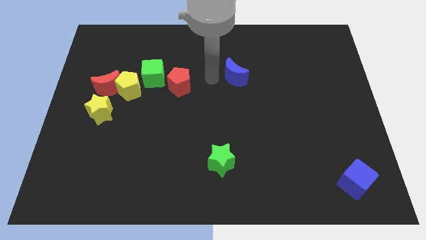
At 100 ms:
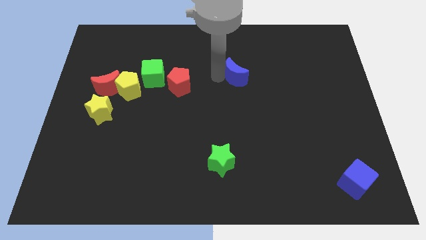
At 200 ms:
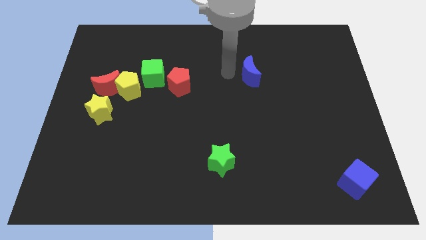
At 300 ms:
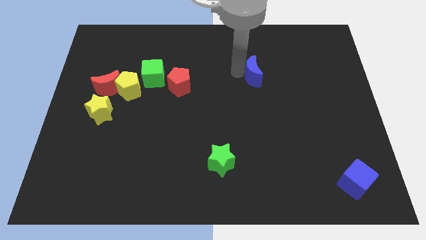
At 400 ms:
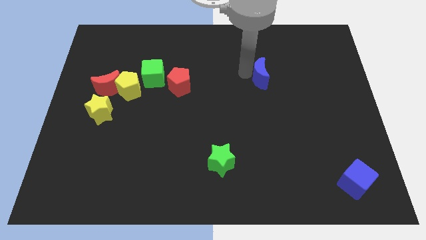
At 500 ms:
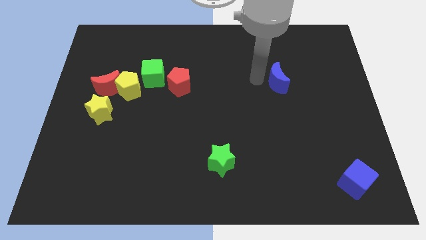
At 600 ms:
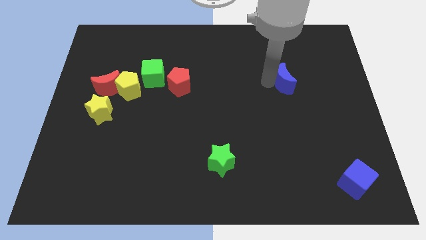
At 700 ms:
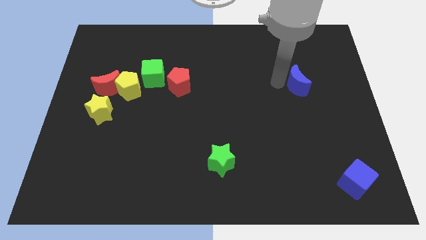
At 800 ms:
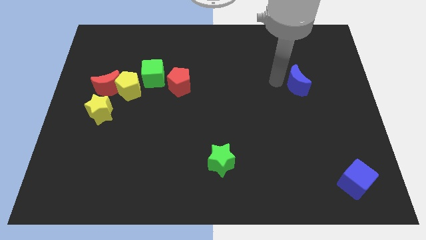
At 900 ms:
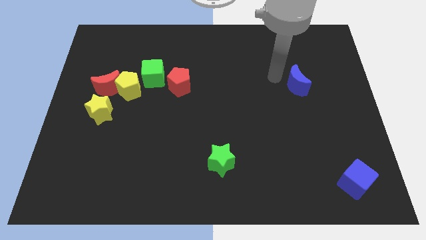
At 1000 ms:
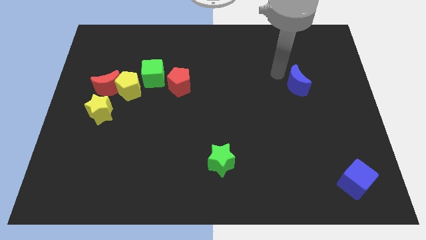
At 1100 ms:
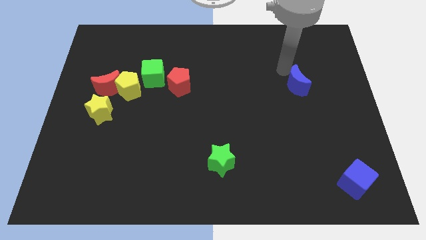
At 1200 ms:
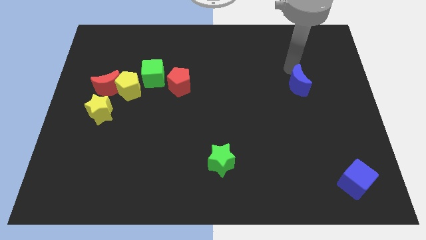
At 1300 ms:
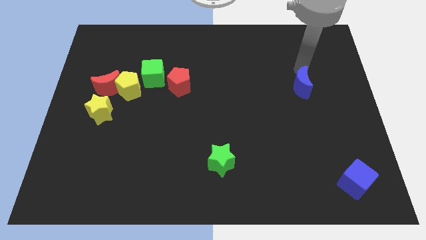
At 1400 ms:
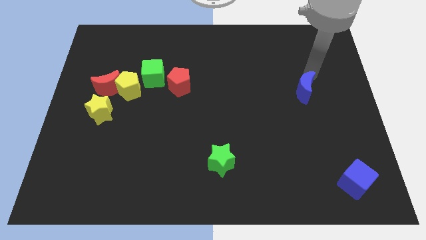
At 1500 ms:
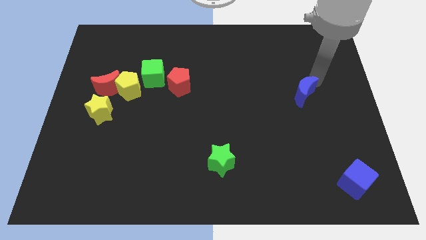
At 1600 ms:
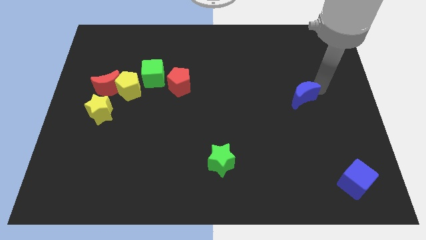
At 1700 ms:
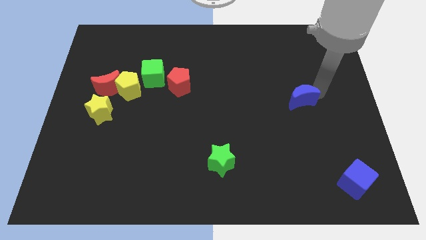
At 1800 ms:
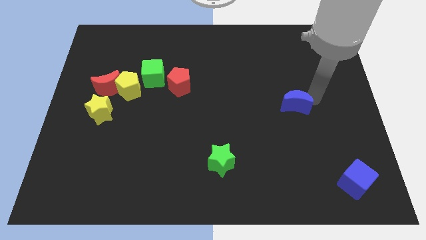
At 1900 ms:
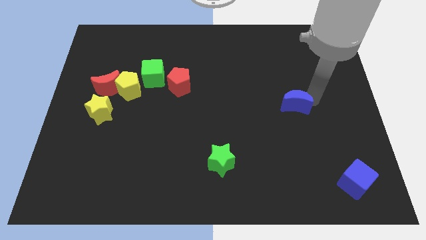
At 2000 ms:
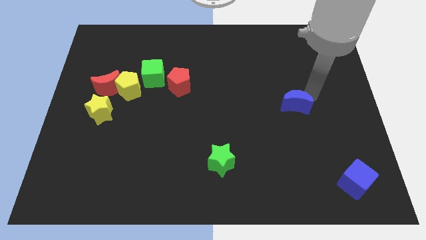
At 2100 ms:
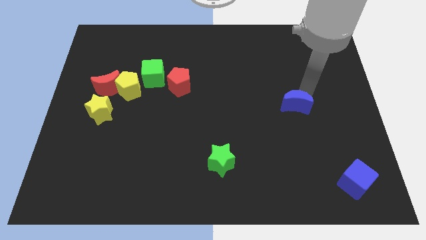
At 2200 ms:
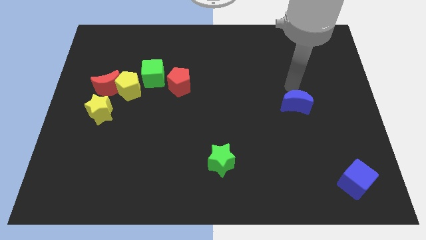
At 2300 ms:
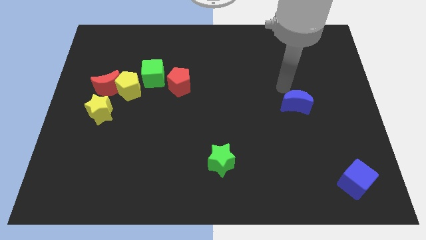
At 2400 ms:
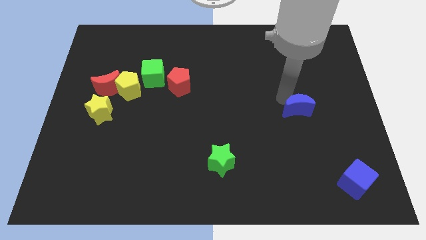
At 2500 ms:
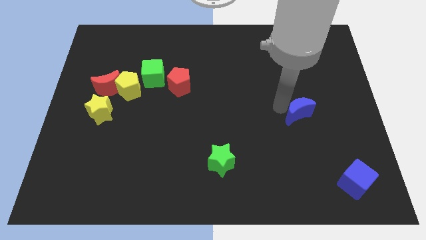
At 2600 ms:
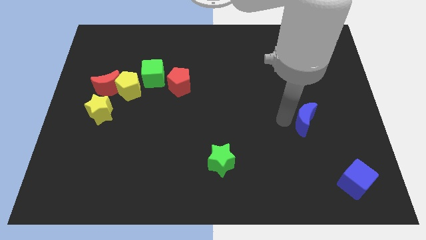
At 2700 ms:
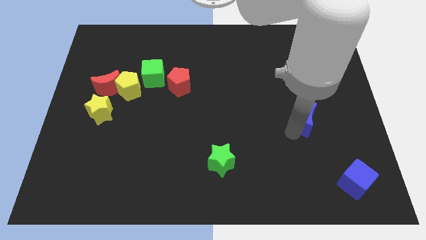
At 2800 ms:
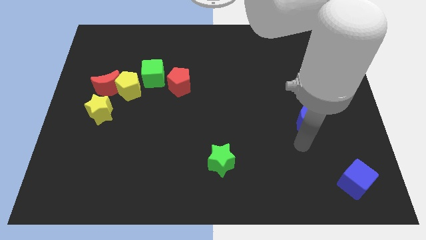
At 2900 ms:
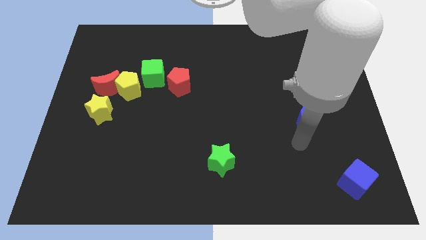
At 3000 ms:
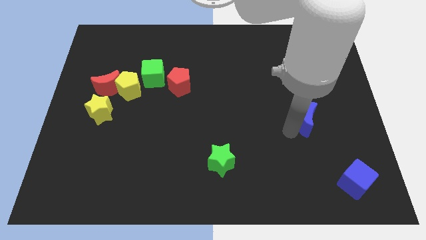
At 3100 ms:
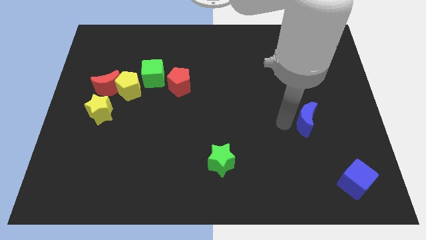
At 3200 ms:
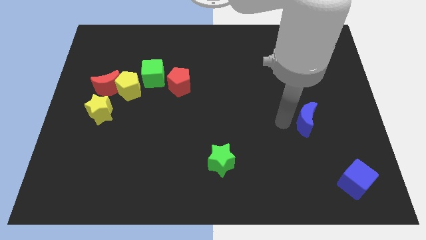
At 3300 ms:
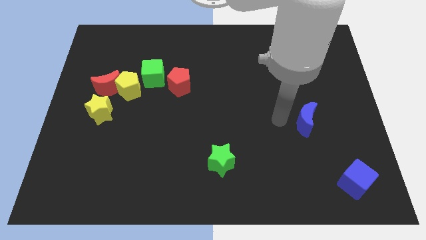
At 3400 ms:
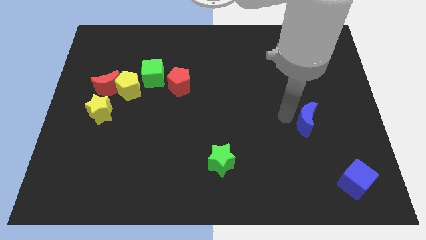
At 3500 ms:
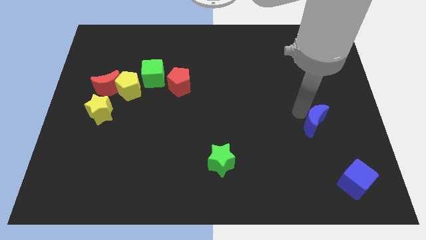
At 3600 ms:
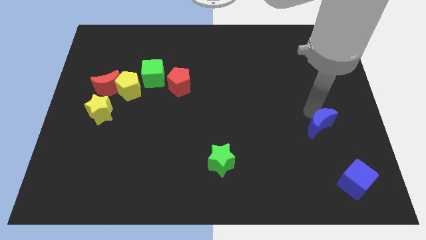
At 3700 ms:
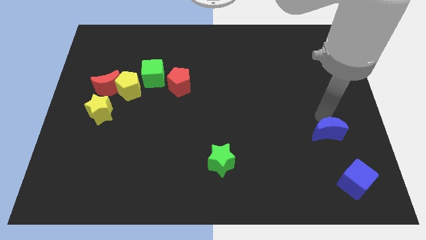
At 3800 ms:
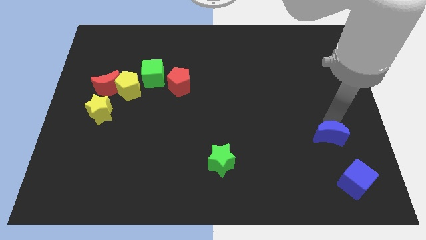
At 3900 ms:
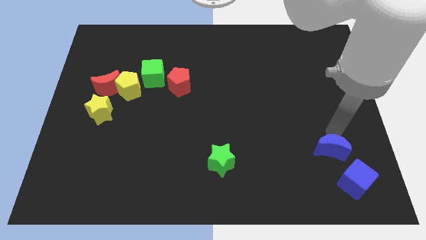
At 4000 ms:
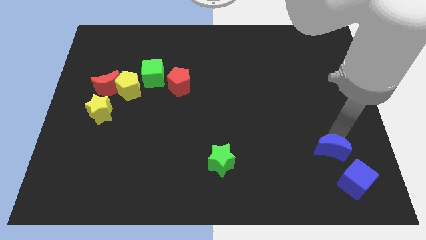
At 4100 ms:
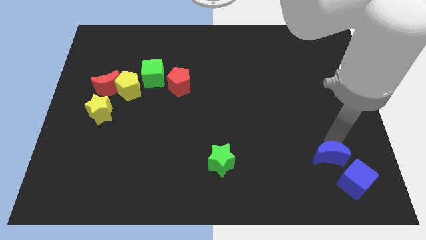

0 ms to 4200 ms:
push blue crescent to the bottom of the board

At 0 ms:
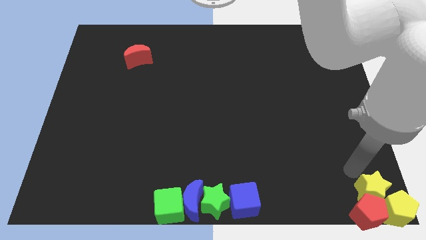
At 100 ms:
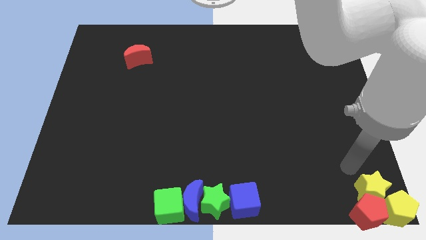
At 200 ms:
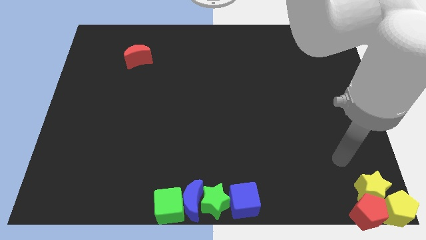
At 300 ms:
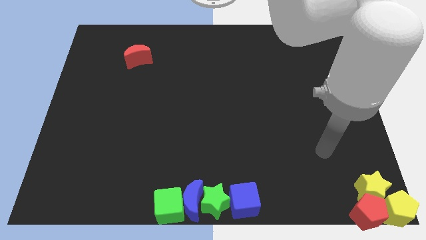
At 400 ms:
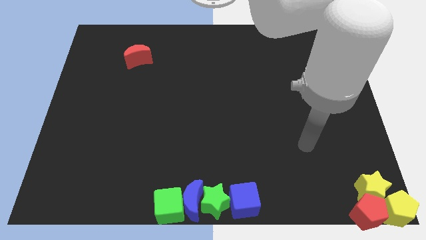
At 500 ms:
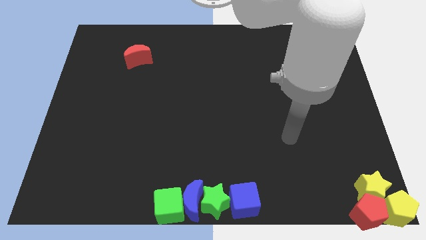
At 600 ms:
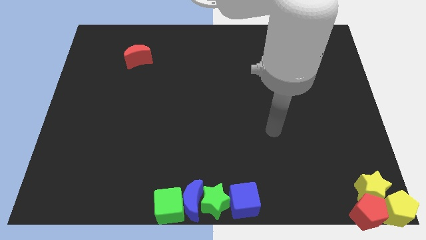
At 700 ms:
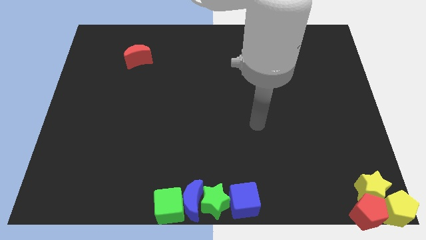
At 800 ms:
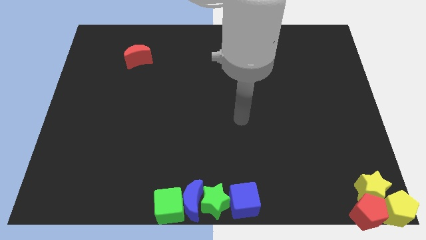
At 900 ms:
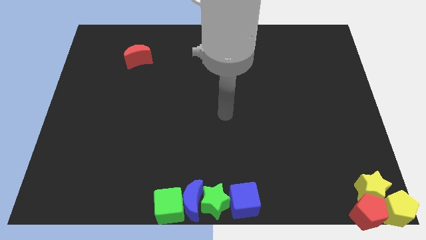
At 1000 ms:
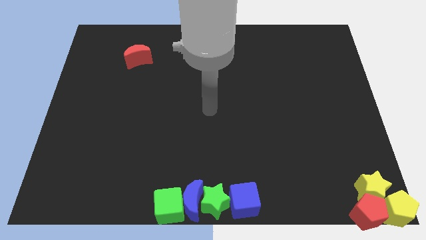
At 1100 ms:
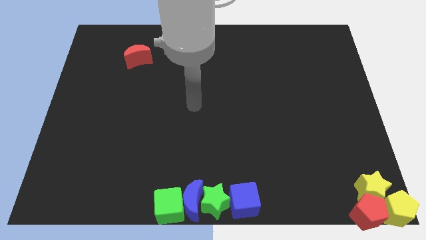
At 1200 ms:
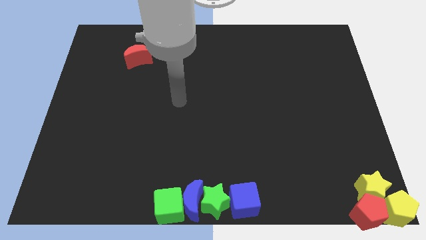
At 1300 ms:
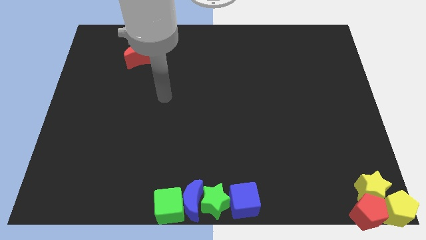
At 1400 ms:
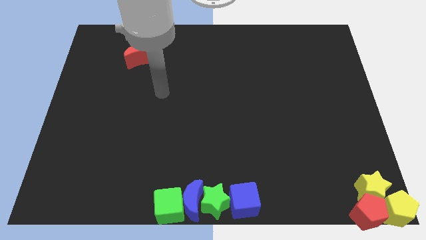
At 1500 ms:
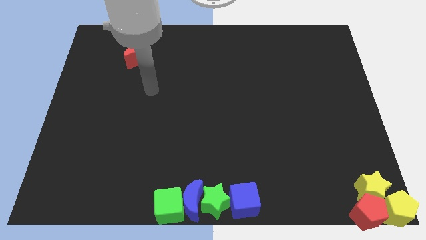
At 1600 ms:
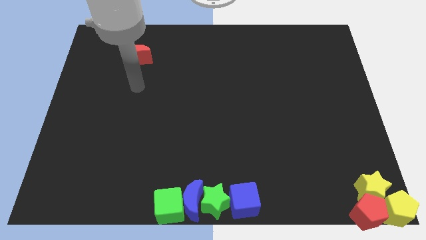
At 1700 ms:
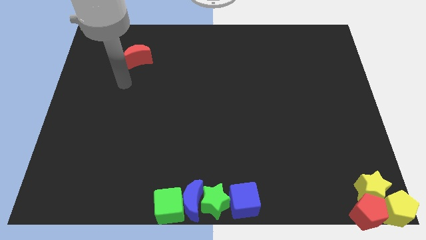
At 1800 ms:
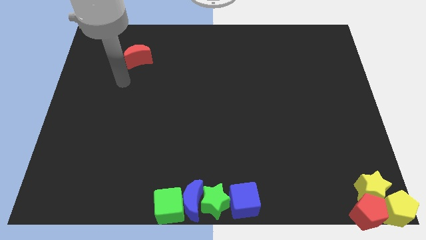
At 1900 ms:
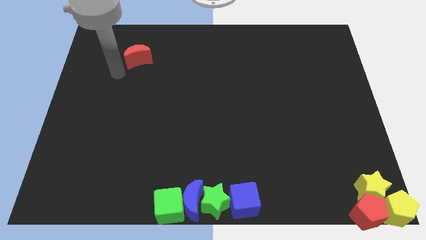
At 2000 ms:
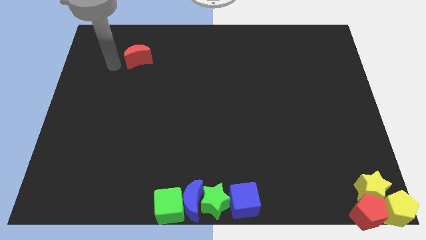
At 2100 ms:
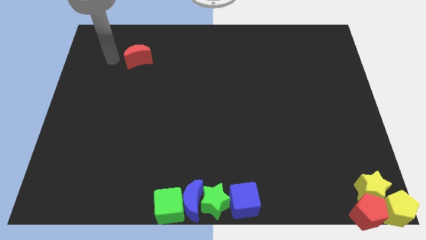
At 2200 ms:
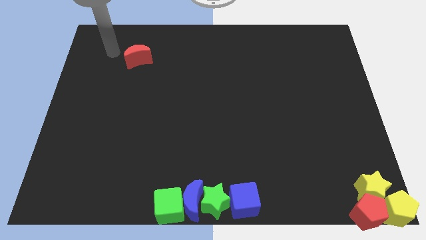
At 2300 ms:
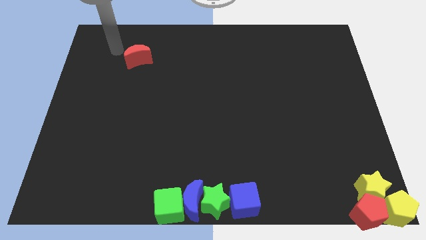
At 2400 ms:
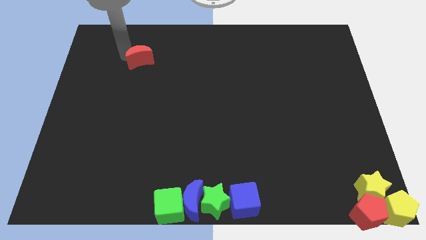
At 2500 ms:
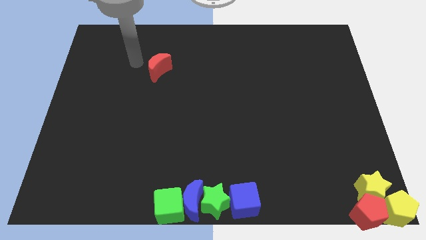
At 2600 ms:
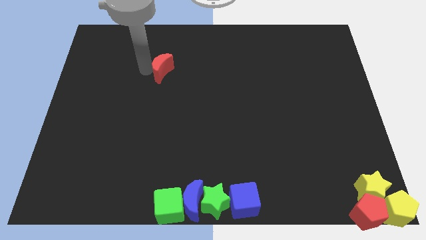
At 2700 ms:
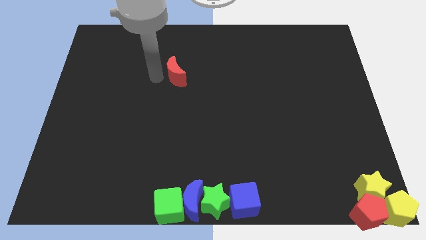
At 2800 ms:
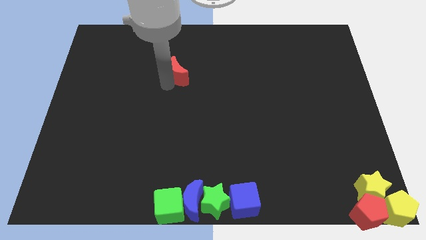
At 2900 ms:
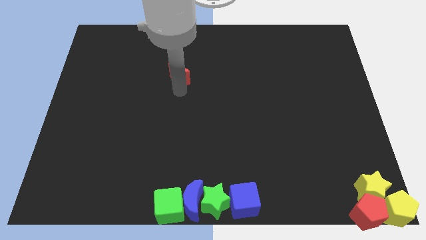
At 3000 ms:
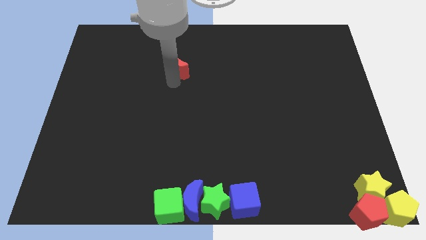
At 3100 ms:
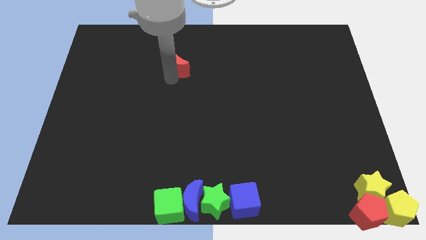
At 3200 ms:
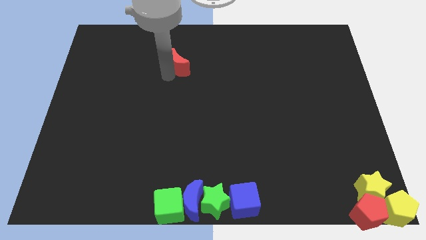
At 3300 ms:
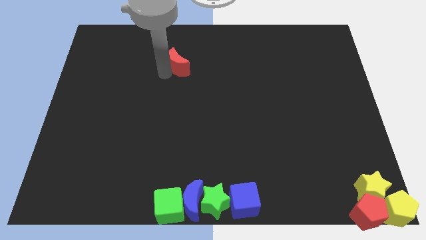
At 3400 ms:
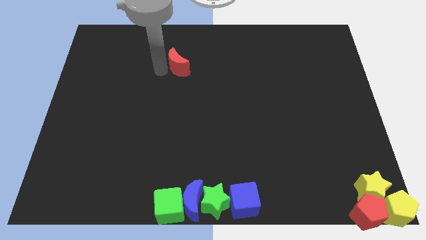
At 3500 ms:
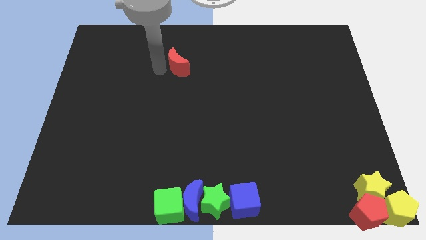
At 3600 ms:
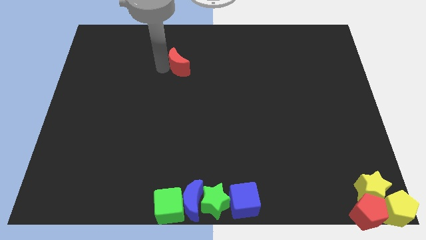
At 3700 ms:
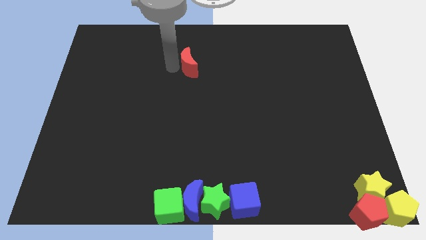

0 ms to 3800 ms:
place the red crescent vertical to the blue crescent

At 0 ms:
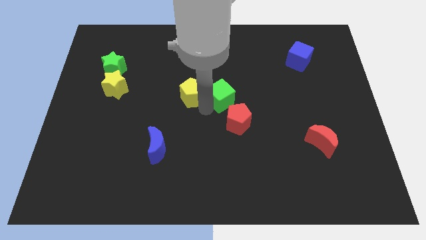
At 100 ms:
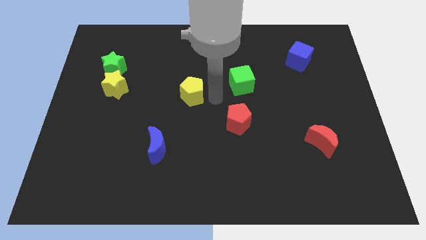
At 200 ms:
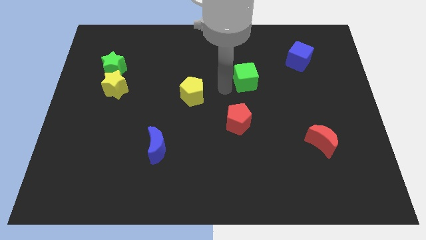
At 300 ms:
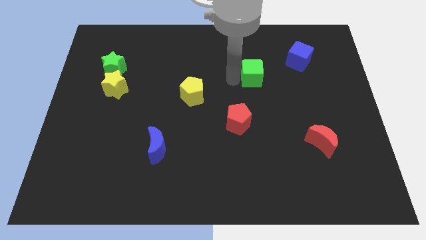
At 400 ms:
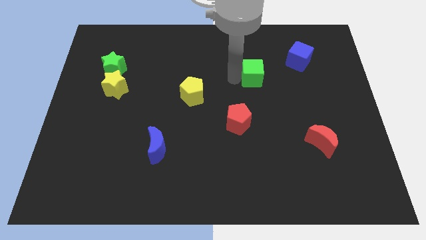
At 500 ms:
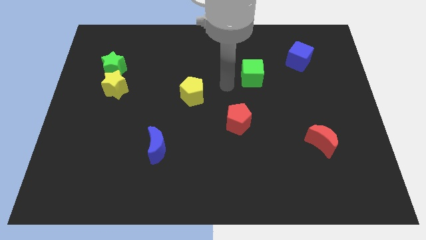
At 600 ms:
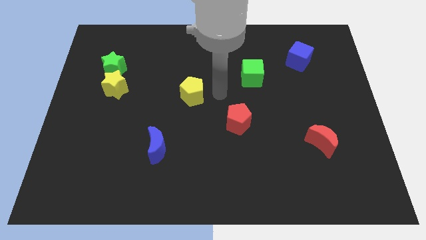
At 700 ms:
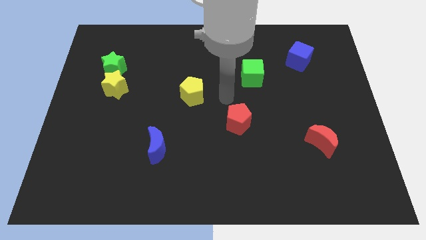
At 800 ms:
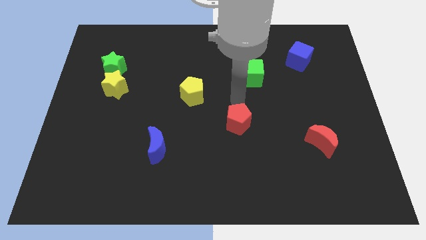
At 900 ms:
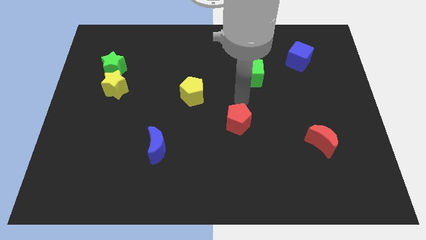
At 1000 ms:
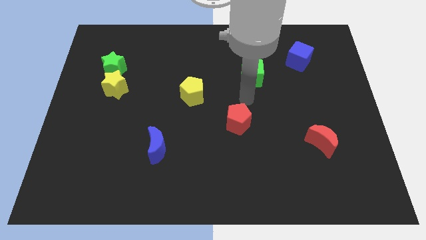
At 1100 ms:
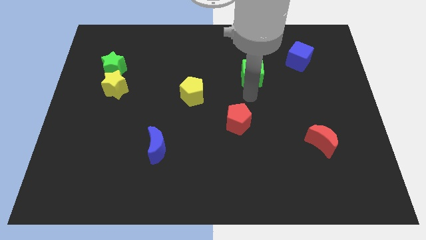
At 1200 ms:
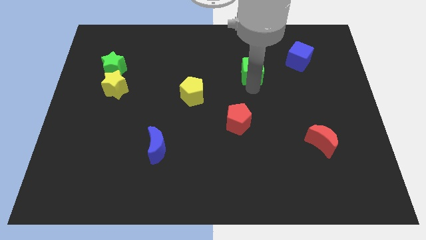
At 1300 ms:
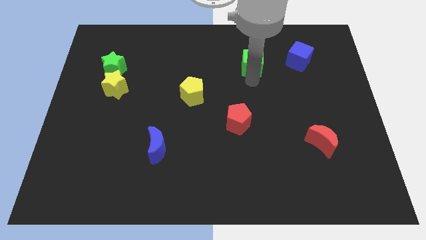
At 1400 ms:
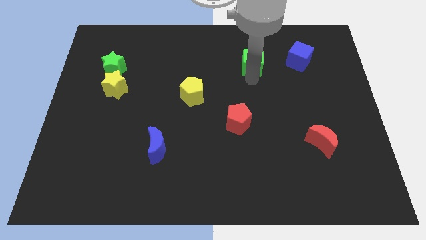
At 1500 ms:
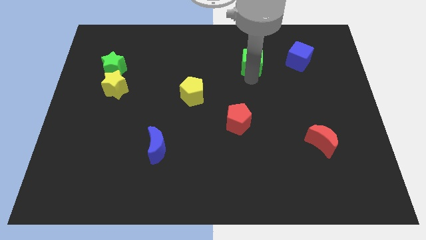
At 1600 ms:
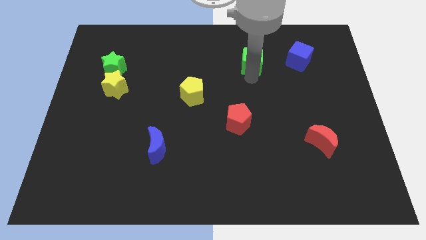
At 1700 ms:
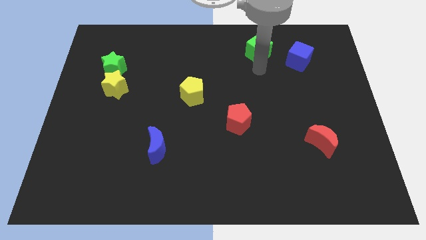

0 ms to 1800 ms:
drag the green star and place it left to the blue cube
